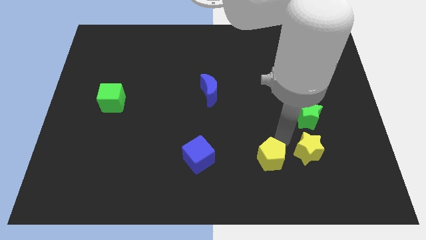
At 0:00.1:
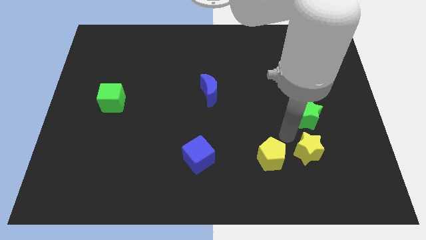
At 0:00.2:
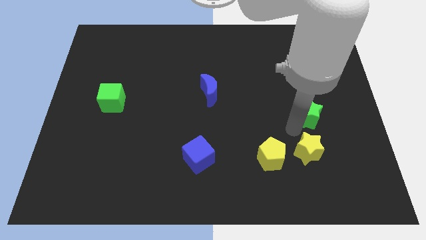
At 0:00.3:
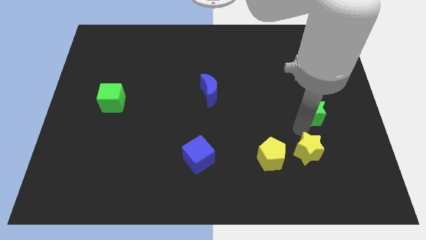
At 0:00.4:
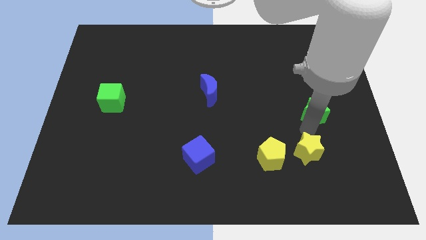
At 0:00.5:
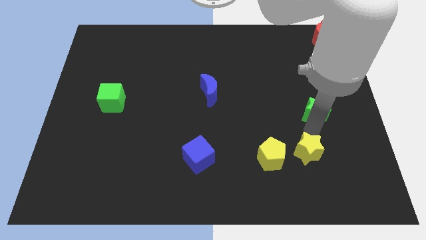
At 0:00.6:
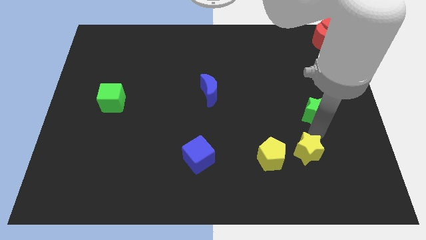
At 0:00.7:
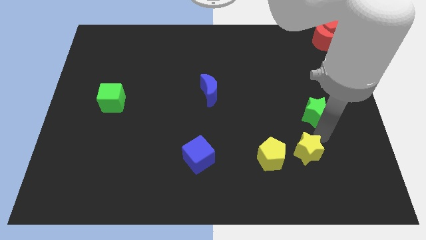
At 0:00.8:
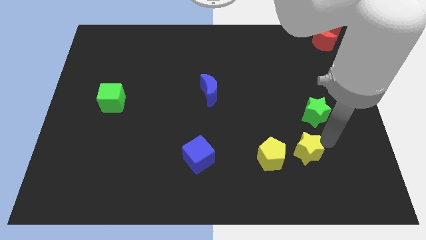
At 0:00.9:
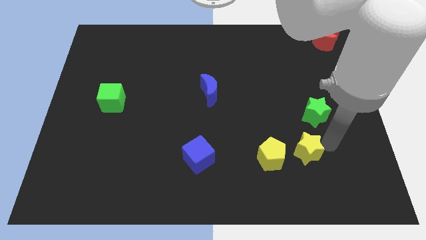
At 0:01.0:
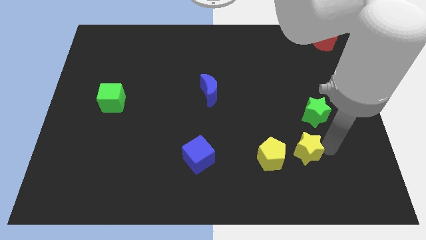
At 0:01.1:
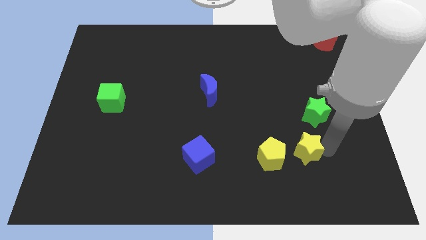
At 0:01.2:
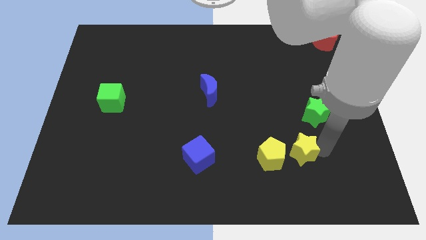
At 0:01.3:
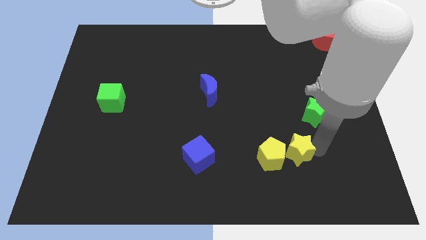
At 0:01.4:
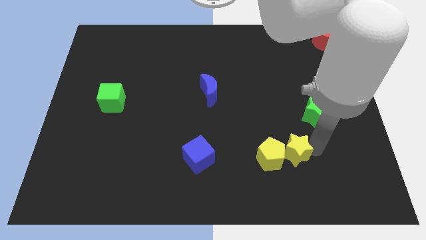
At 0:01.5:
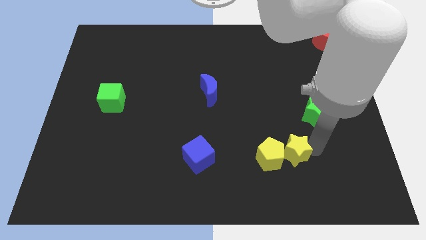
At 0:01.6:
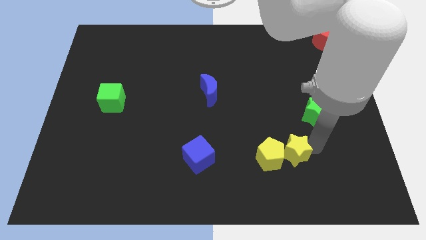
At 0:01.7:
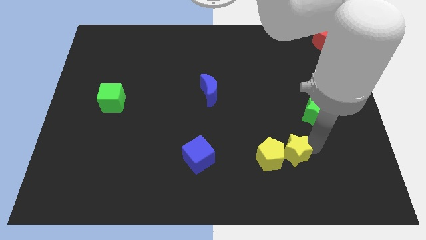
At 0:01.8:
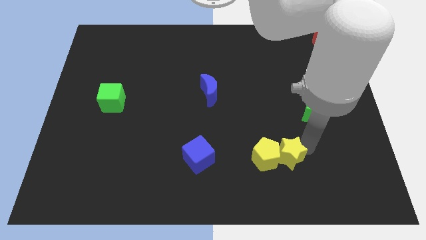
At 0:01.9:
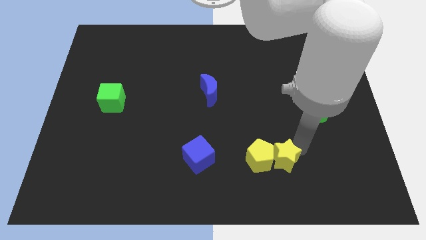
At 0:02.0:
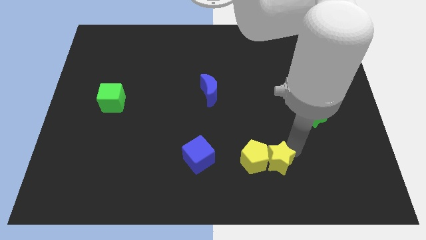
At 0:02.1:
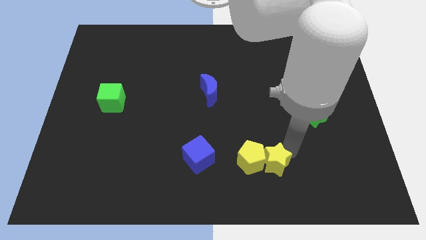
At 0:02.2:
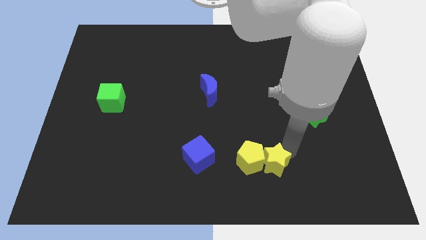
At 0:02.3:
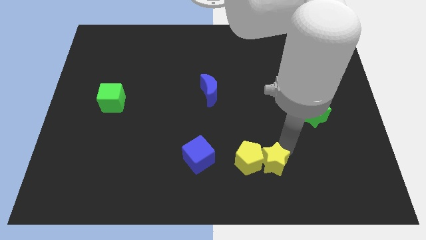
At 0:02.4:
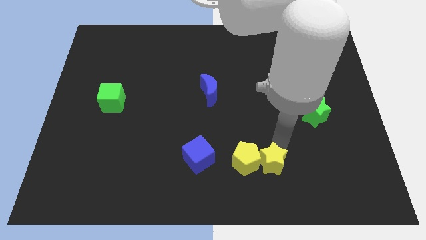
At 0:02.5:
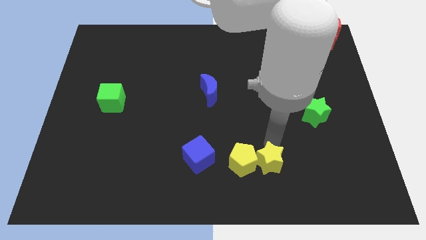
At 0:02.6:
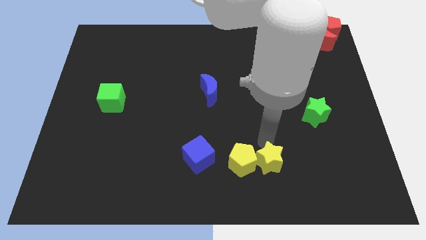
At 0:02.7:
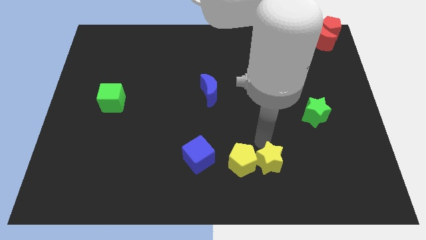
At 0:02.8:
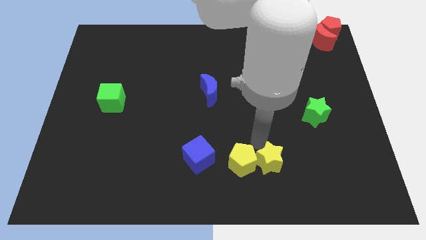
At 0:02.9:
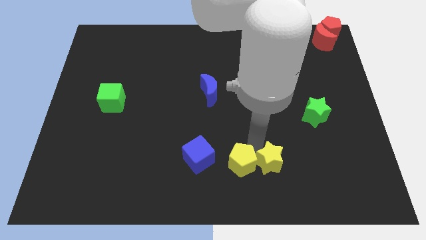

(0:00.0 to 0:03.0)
push the yellow star into the yellow pentagon

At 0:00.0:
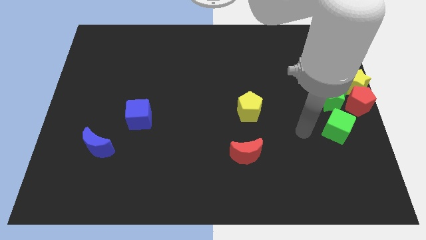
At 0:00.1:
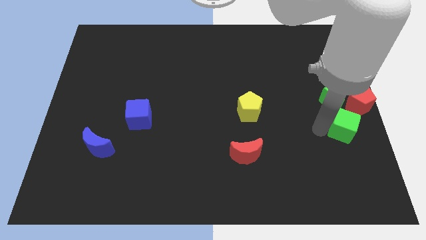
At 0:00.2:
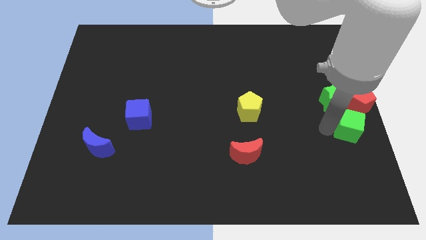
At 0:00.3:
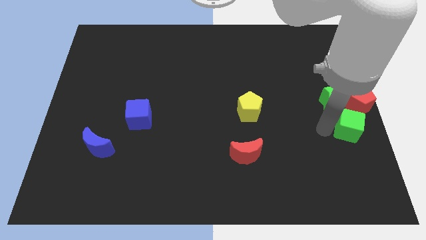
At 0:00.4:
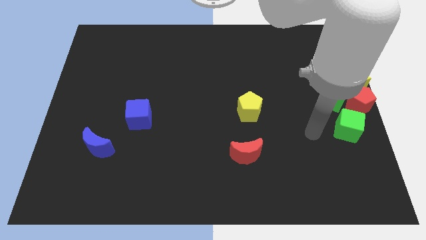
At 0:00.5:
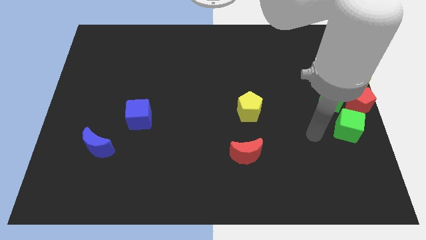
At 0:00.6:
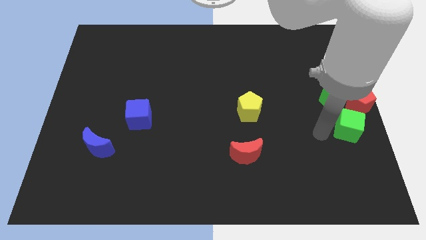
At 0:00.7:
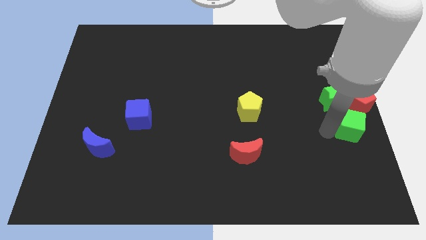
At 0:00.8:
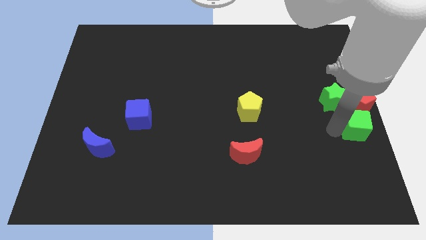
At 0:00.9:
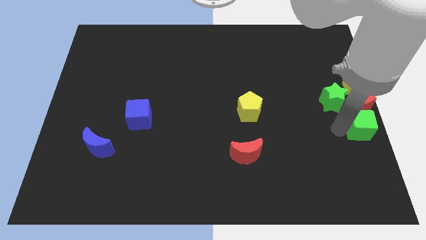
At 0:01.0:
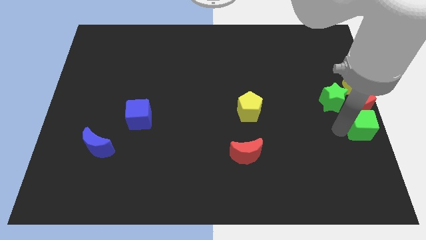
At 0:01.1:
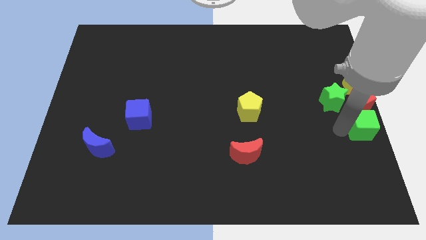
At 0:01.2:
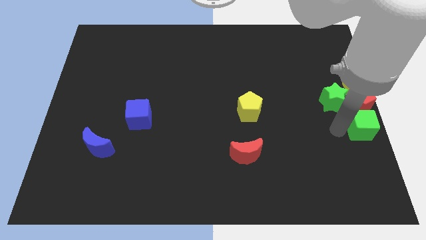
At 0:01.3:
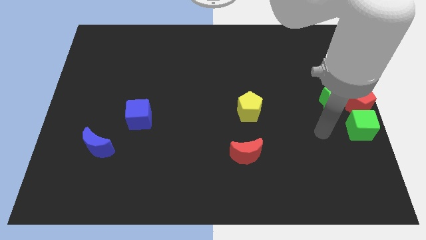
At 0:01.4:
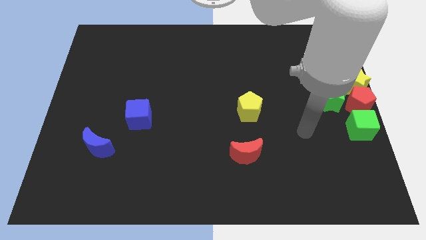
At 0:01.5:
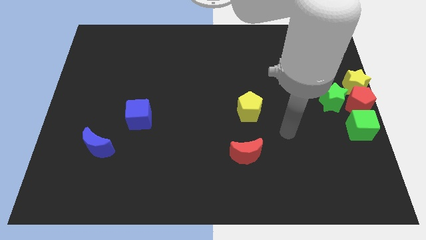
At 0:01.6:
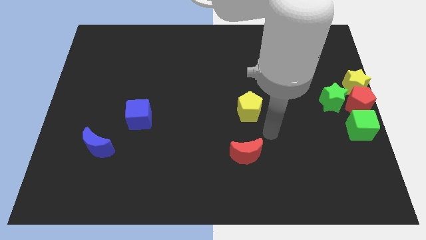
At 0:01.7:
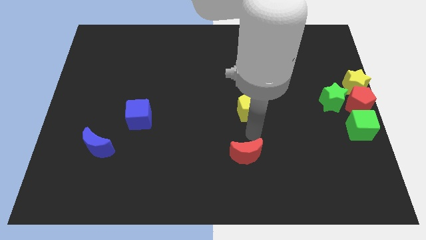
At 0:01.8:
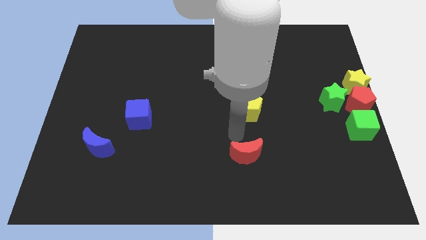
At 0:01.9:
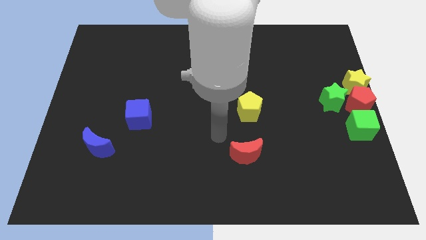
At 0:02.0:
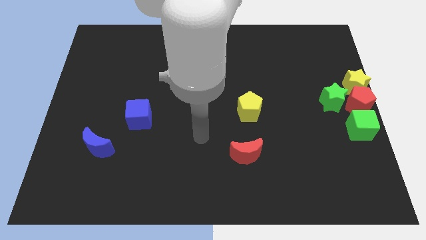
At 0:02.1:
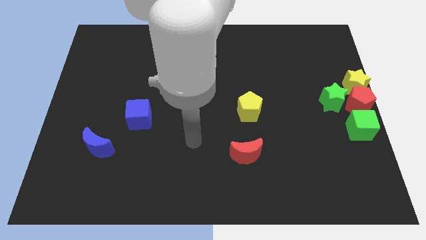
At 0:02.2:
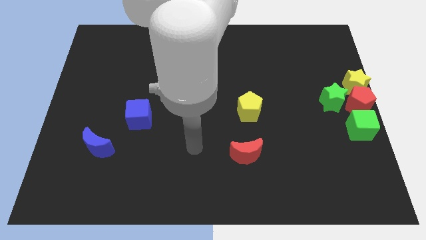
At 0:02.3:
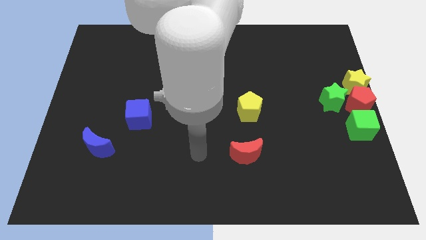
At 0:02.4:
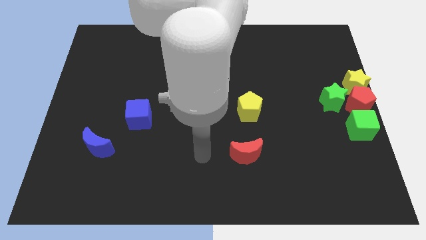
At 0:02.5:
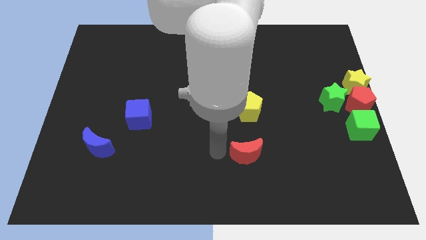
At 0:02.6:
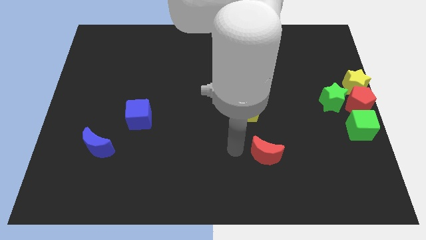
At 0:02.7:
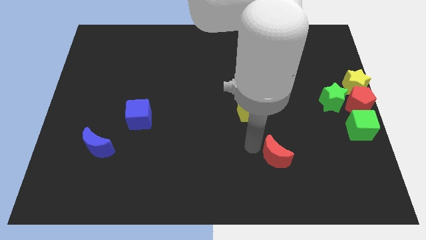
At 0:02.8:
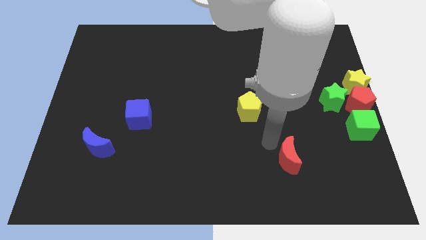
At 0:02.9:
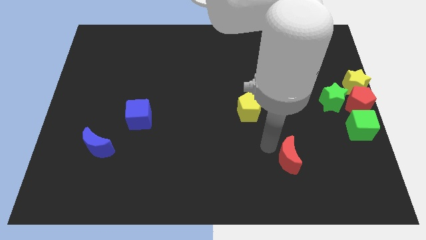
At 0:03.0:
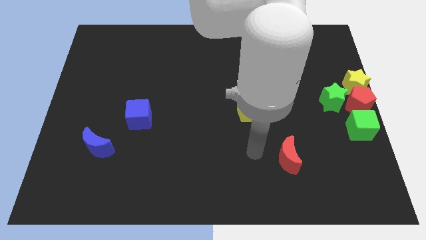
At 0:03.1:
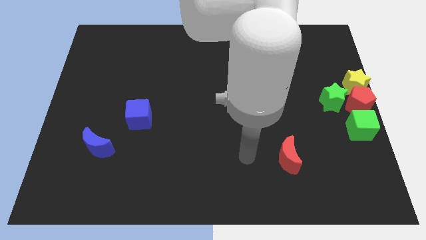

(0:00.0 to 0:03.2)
place the green cube below the red pentagon to form a vertical line

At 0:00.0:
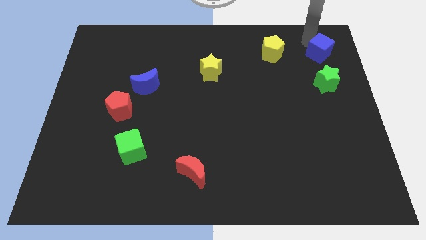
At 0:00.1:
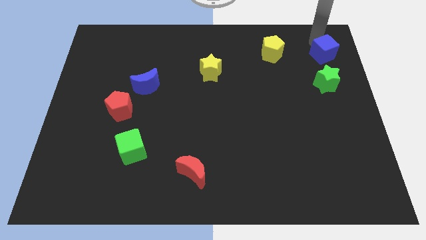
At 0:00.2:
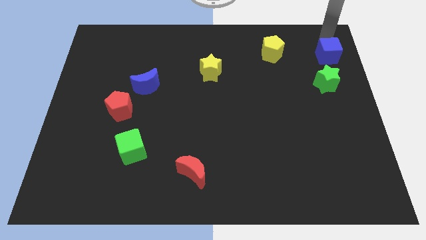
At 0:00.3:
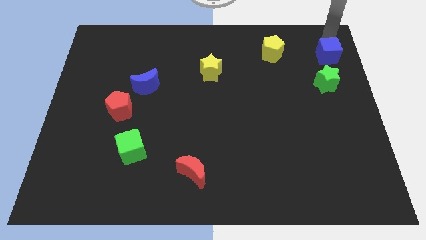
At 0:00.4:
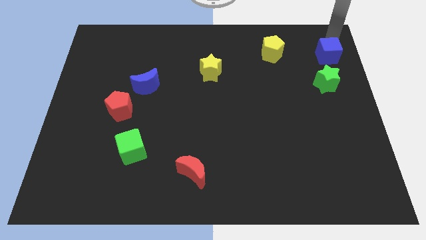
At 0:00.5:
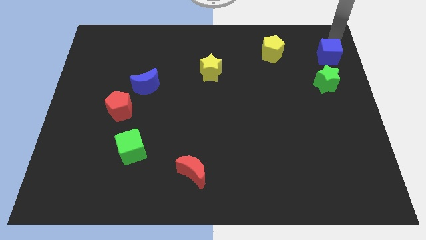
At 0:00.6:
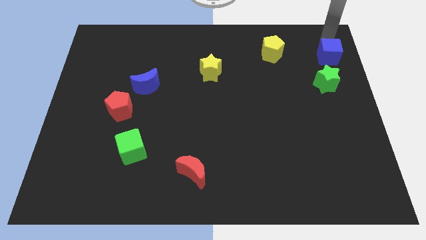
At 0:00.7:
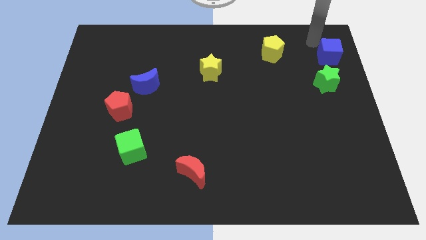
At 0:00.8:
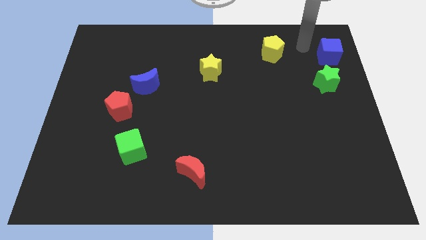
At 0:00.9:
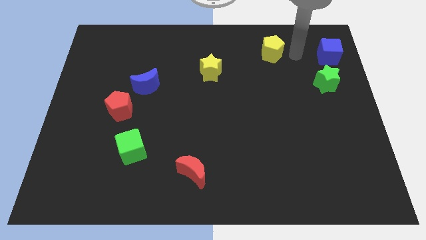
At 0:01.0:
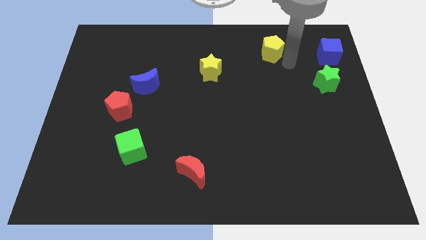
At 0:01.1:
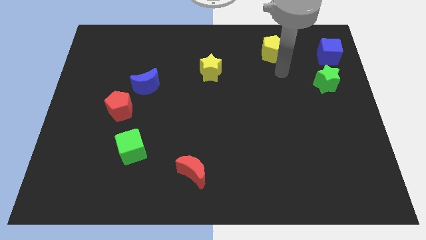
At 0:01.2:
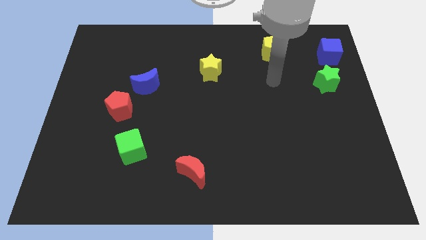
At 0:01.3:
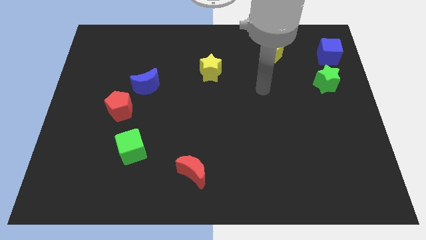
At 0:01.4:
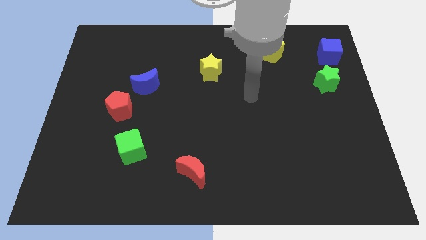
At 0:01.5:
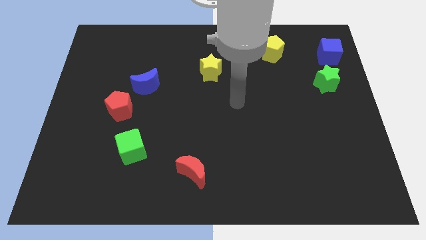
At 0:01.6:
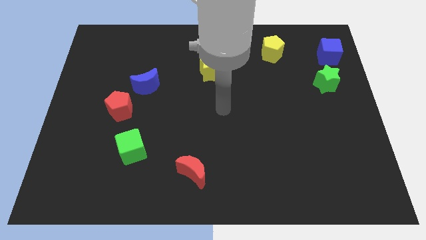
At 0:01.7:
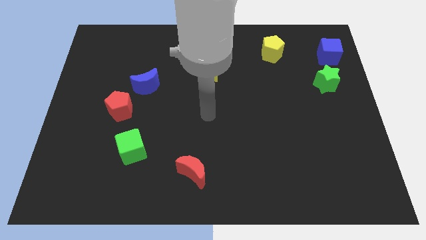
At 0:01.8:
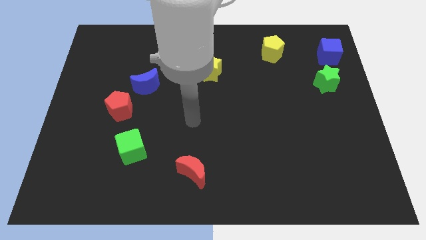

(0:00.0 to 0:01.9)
drag the pointer towards the center of the board

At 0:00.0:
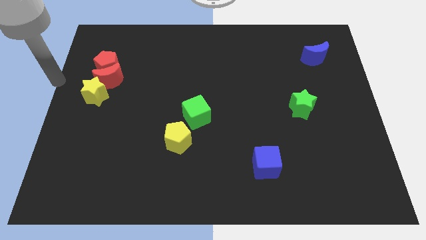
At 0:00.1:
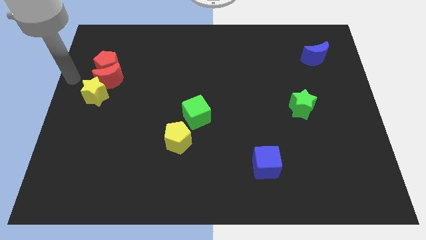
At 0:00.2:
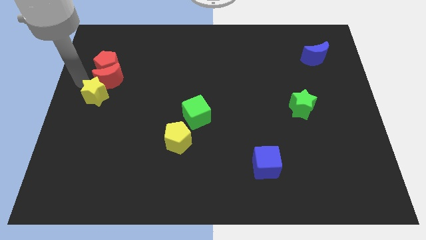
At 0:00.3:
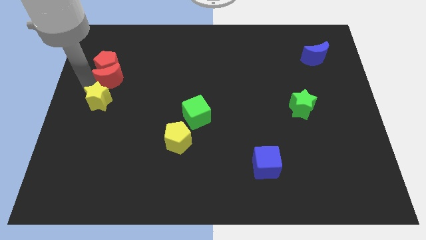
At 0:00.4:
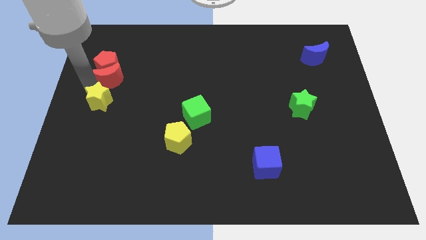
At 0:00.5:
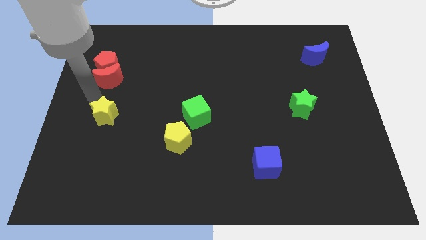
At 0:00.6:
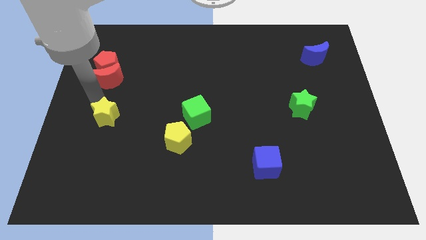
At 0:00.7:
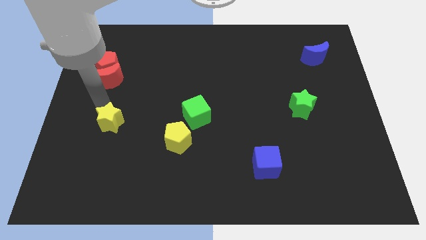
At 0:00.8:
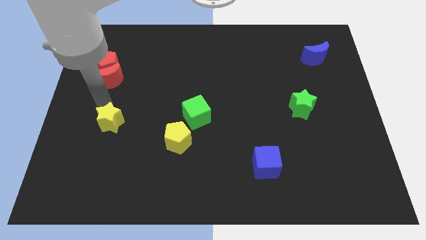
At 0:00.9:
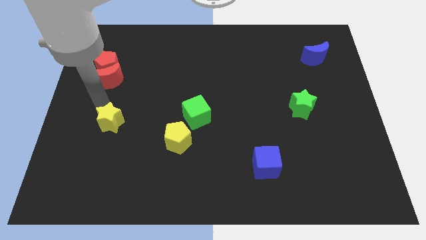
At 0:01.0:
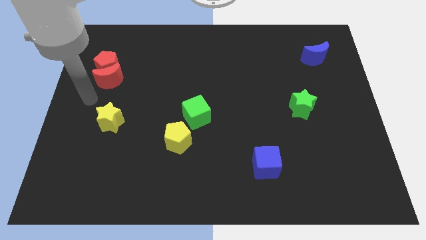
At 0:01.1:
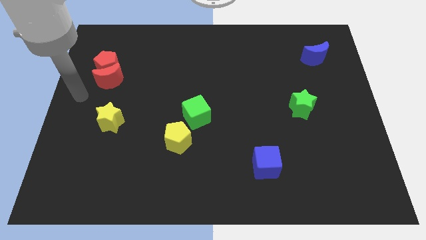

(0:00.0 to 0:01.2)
push the yellow star downwards
